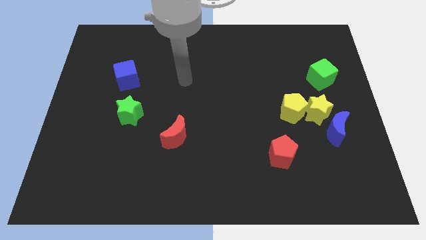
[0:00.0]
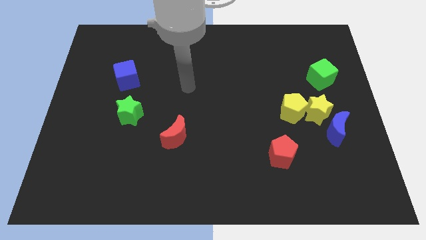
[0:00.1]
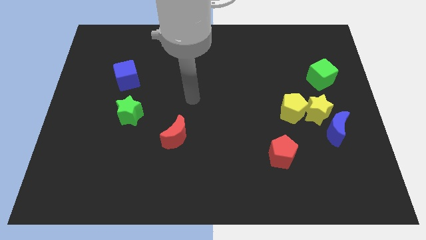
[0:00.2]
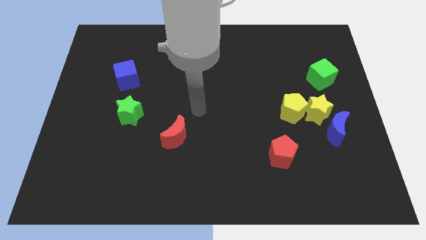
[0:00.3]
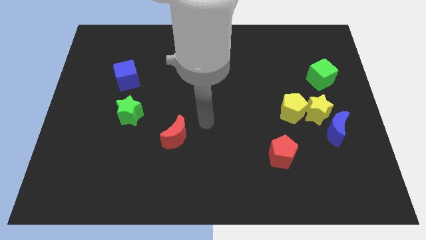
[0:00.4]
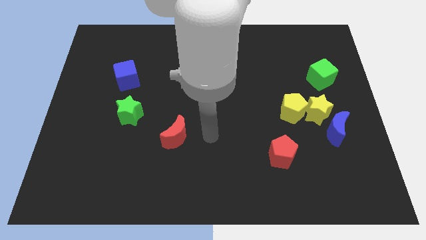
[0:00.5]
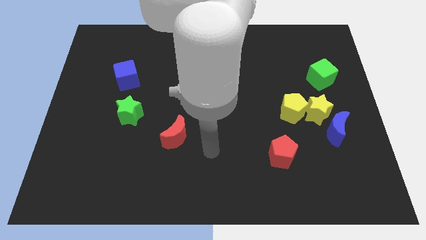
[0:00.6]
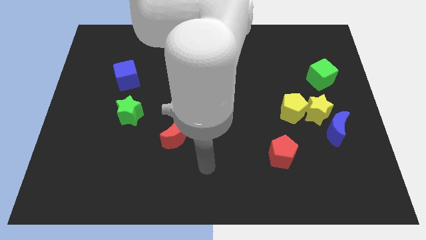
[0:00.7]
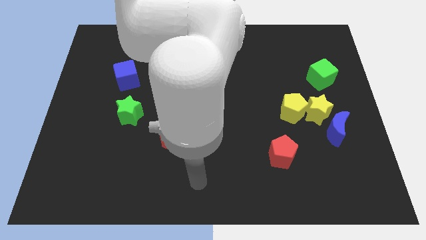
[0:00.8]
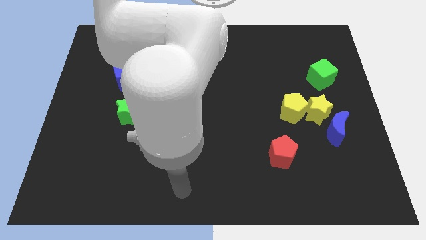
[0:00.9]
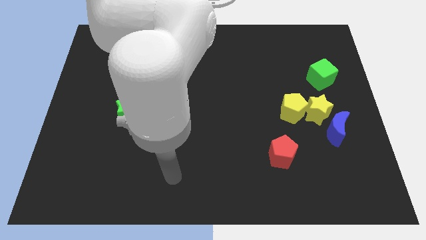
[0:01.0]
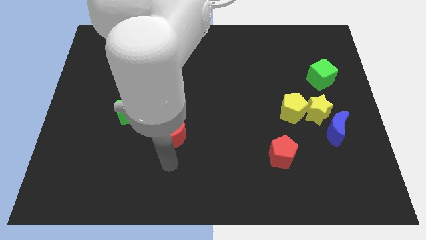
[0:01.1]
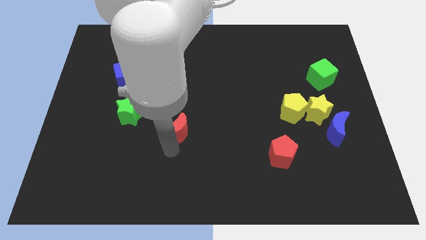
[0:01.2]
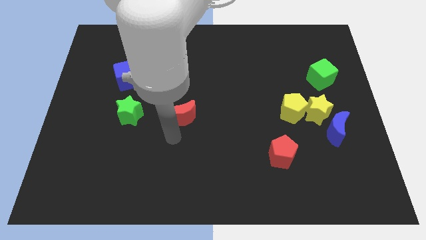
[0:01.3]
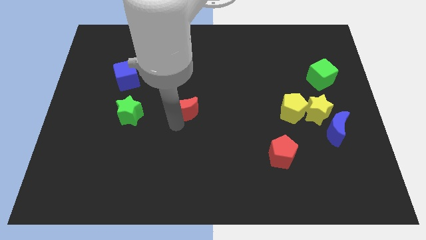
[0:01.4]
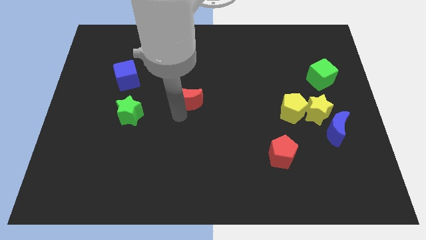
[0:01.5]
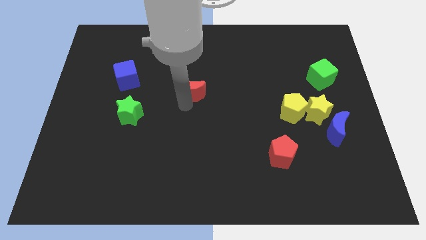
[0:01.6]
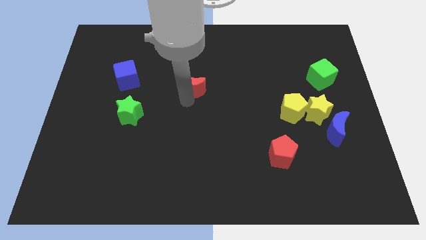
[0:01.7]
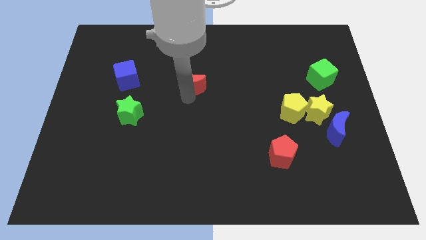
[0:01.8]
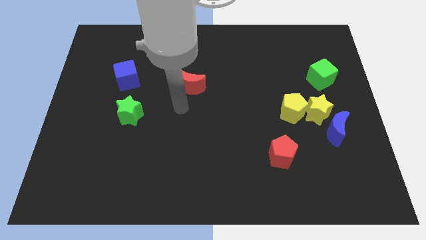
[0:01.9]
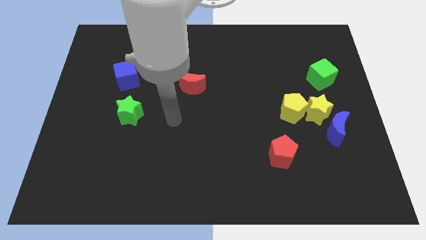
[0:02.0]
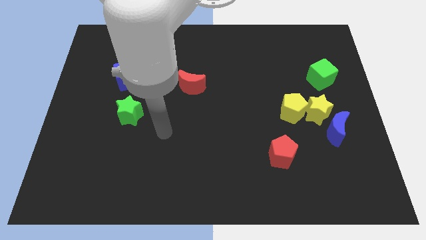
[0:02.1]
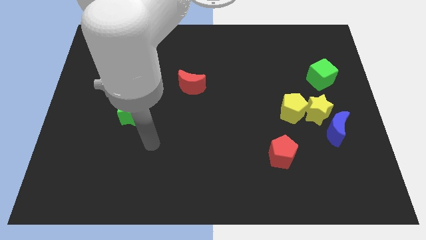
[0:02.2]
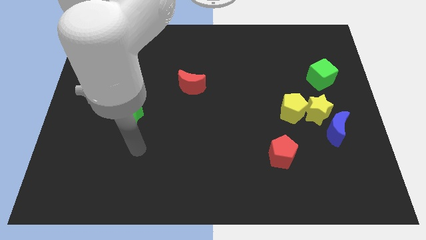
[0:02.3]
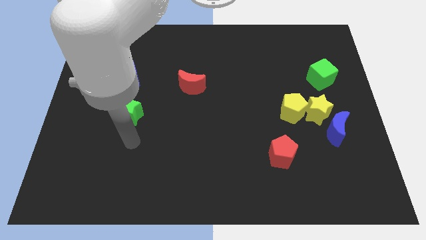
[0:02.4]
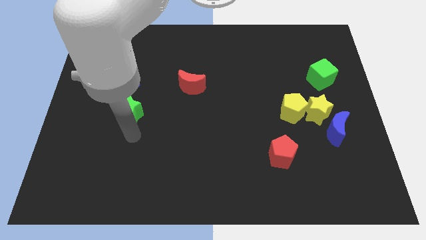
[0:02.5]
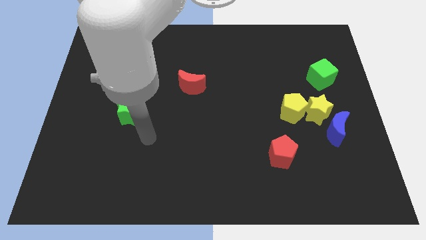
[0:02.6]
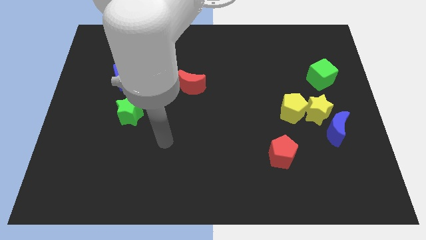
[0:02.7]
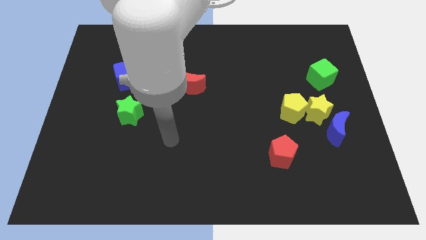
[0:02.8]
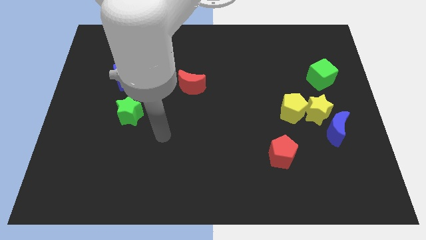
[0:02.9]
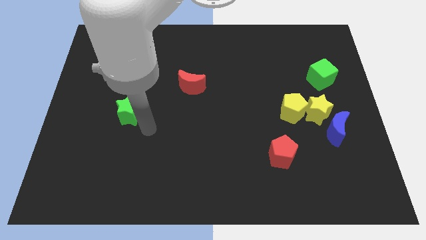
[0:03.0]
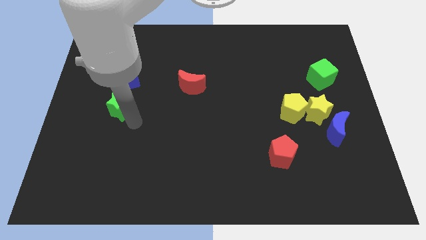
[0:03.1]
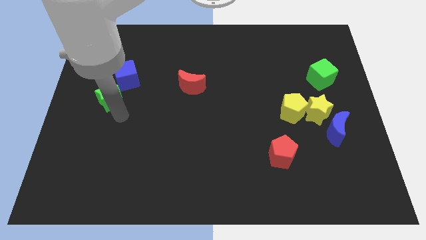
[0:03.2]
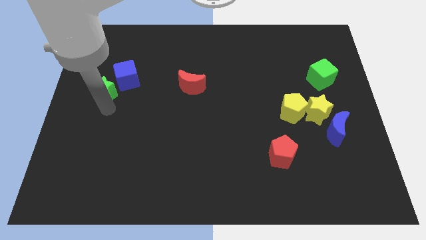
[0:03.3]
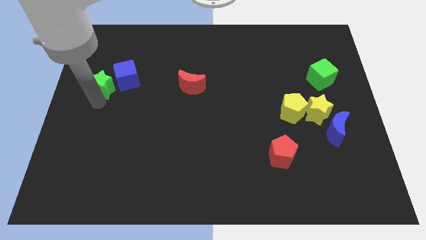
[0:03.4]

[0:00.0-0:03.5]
move the red crescent and green star towards the top

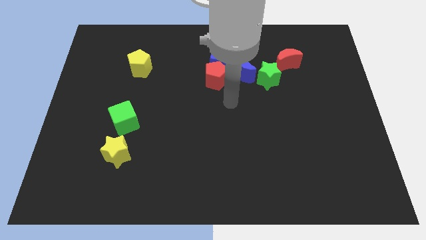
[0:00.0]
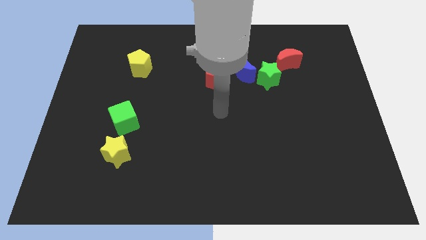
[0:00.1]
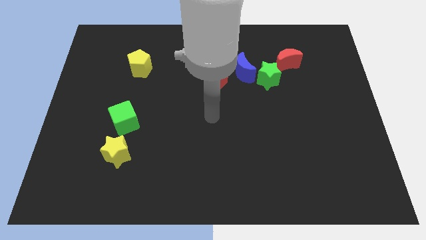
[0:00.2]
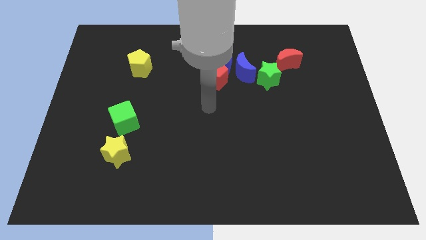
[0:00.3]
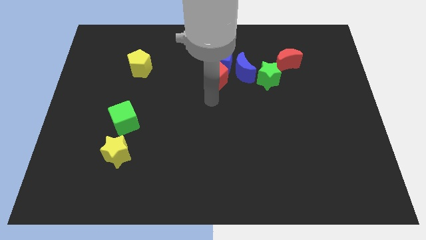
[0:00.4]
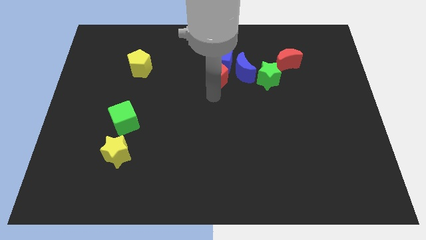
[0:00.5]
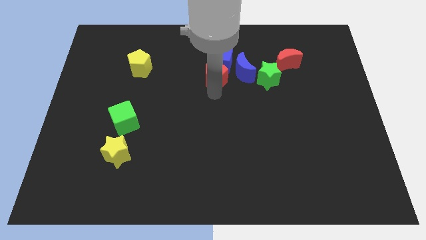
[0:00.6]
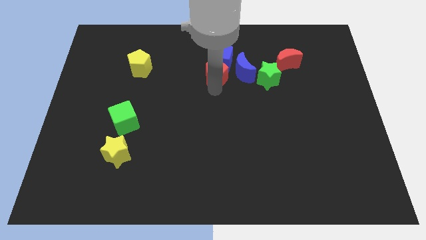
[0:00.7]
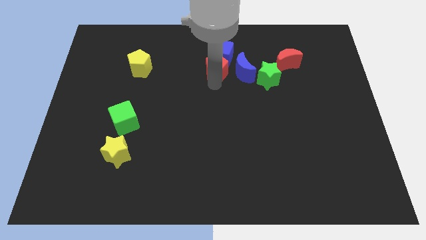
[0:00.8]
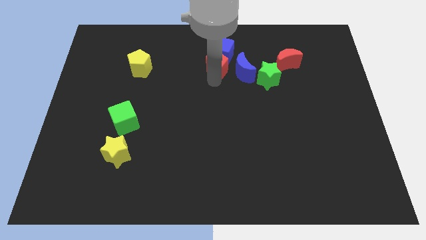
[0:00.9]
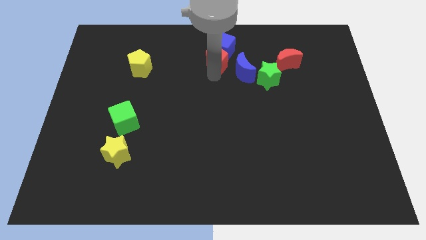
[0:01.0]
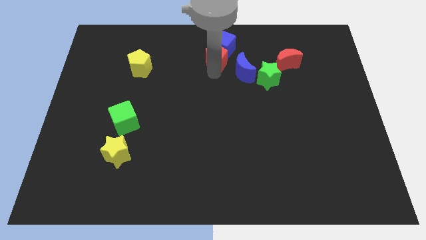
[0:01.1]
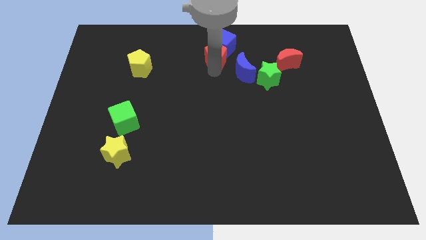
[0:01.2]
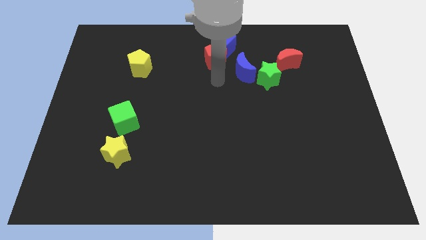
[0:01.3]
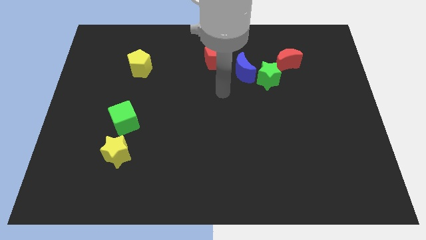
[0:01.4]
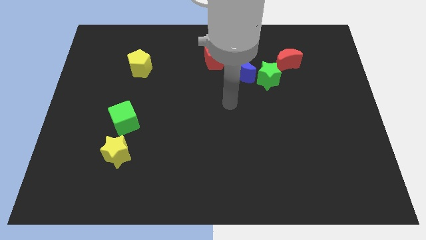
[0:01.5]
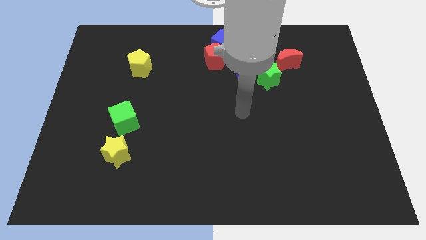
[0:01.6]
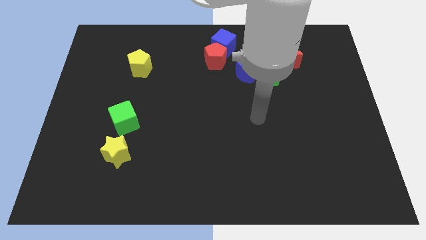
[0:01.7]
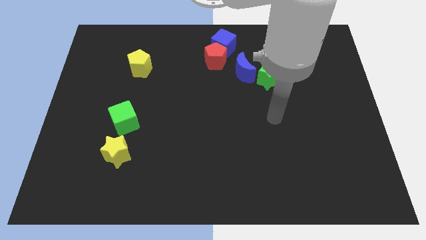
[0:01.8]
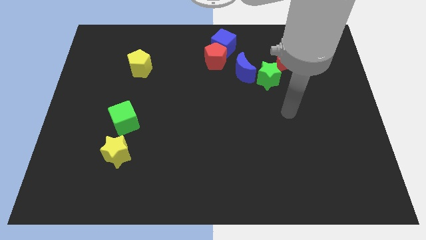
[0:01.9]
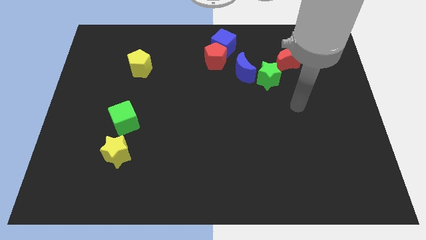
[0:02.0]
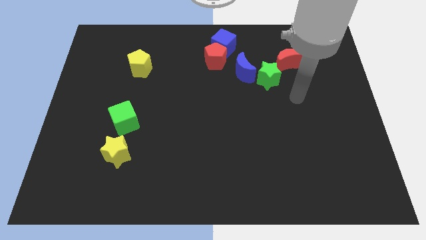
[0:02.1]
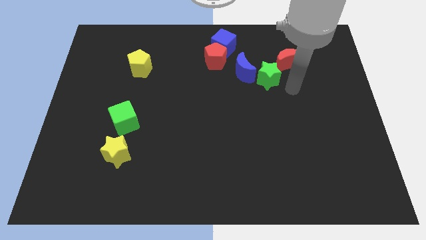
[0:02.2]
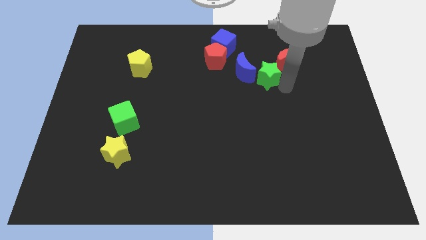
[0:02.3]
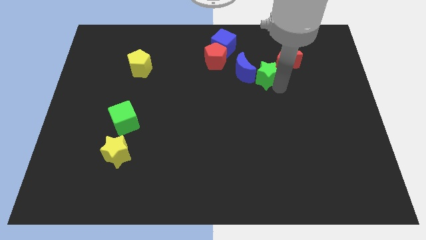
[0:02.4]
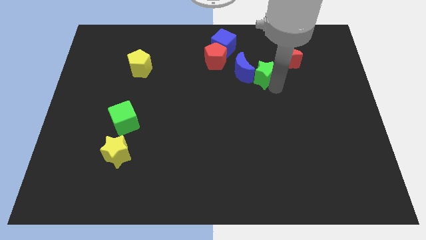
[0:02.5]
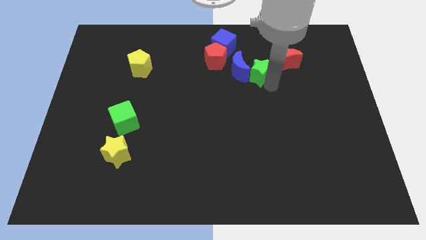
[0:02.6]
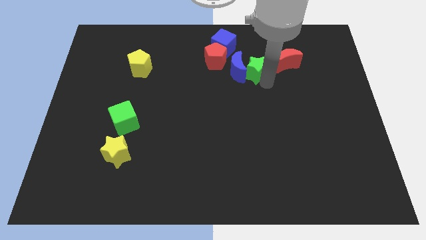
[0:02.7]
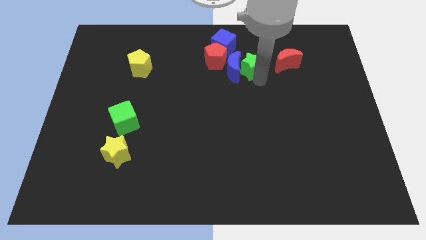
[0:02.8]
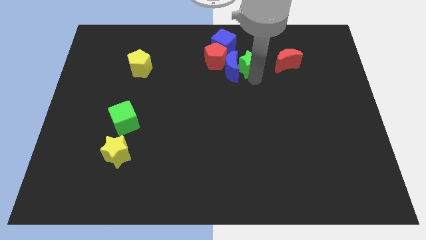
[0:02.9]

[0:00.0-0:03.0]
separate green star and red moon

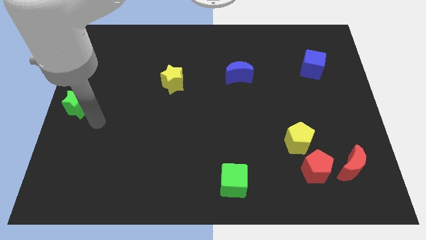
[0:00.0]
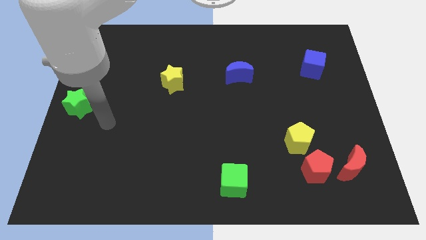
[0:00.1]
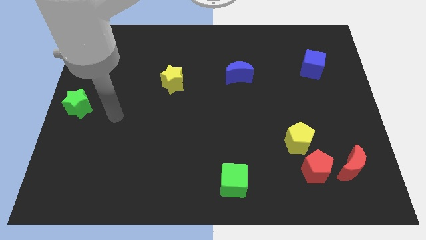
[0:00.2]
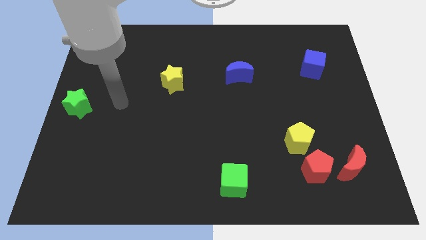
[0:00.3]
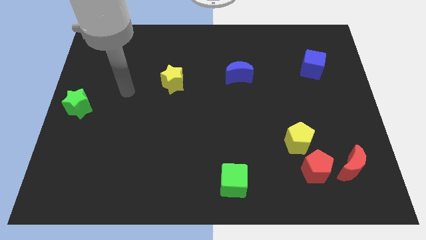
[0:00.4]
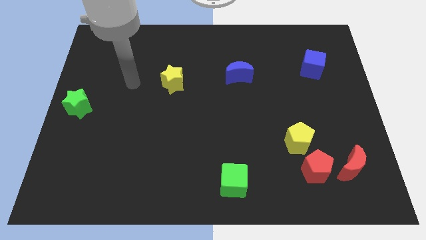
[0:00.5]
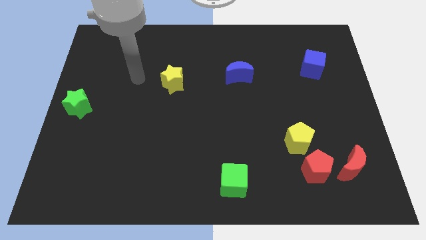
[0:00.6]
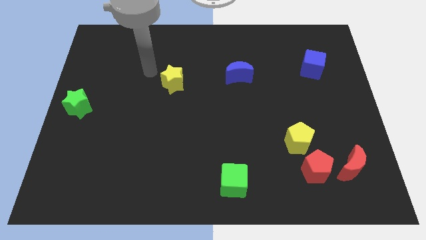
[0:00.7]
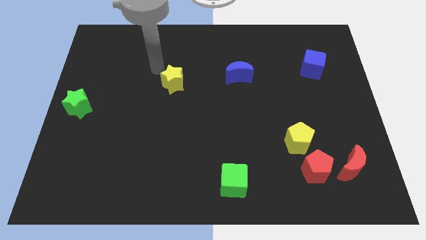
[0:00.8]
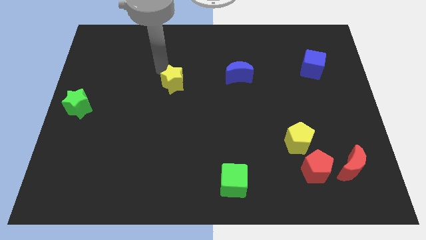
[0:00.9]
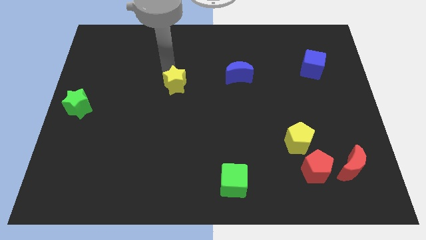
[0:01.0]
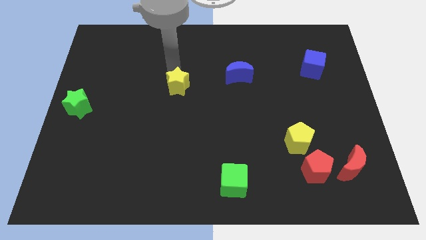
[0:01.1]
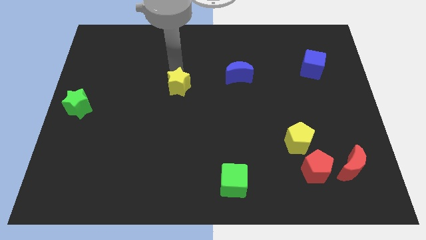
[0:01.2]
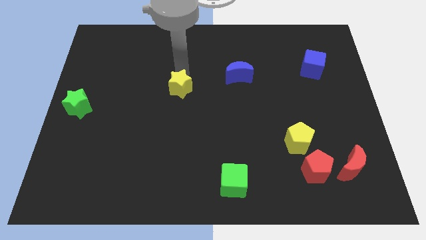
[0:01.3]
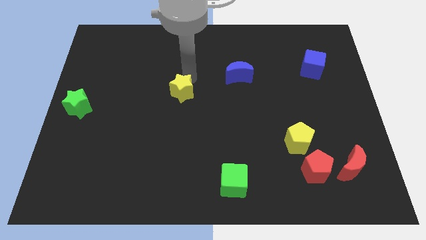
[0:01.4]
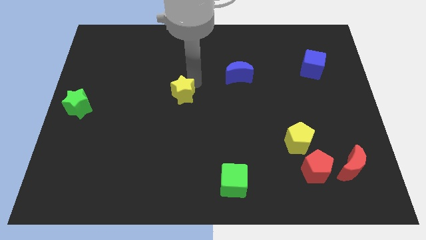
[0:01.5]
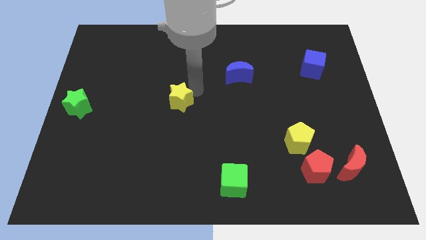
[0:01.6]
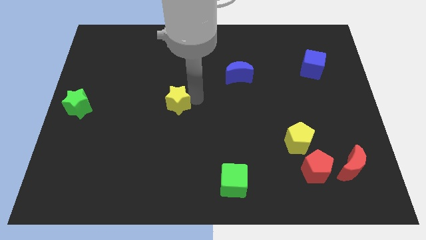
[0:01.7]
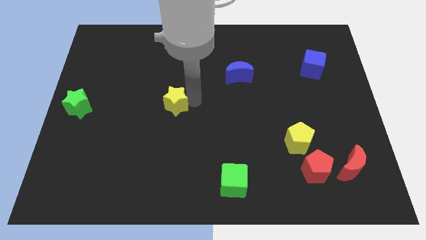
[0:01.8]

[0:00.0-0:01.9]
place yellow star to the center of the board

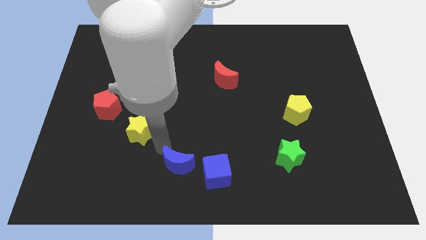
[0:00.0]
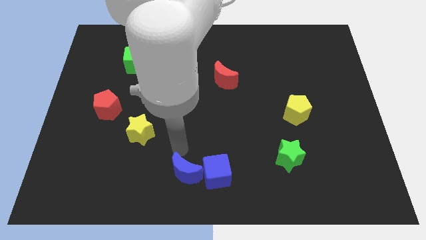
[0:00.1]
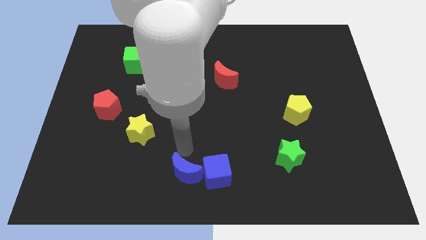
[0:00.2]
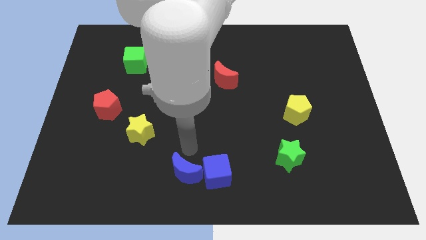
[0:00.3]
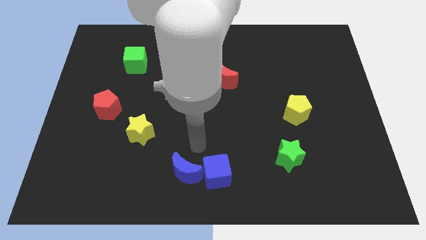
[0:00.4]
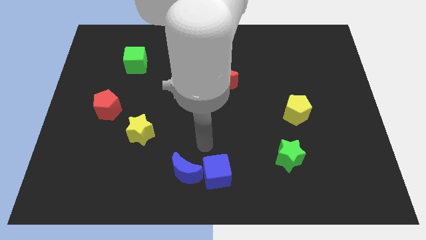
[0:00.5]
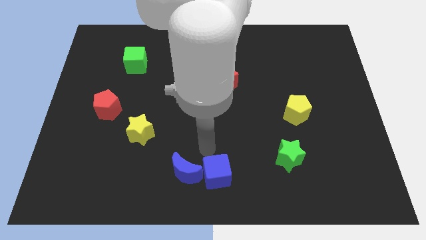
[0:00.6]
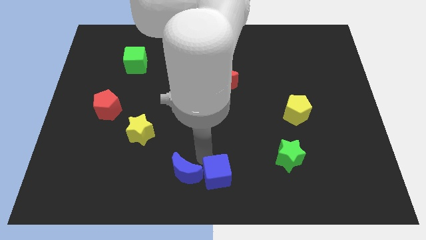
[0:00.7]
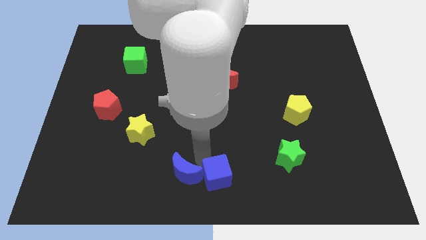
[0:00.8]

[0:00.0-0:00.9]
place the blue crescent to the top left side of the blue cube
